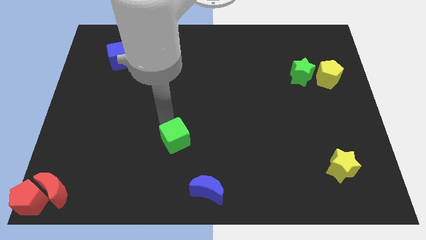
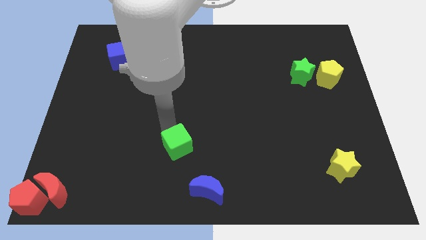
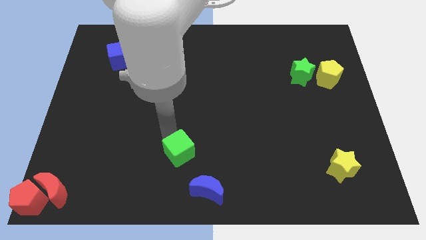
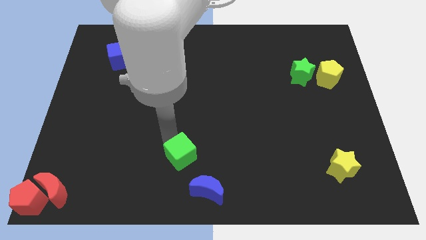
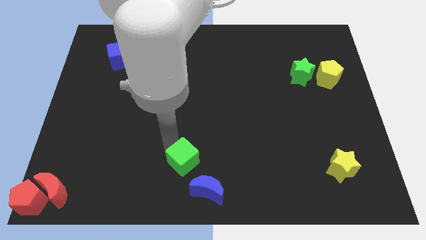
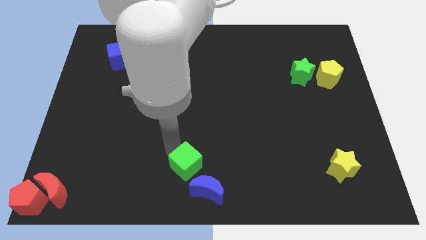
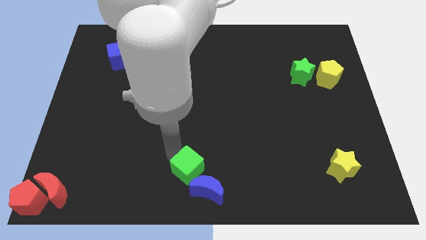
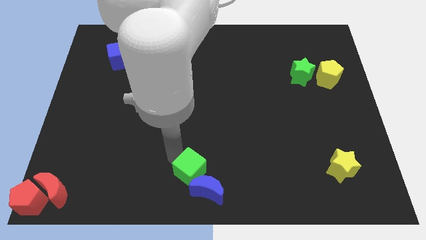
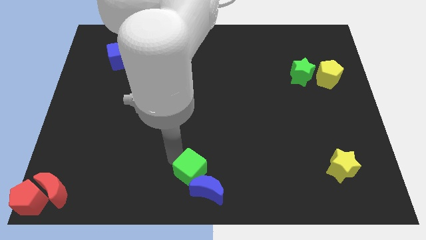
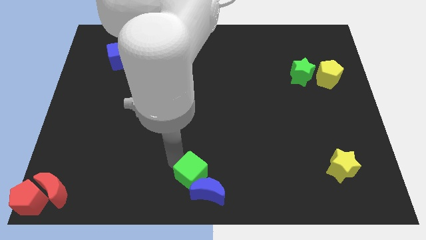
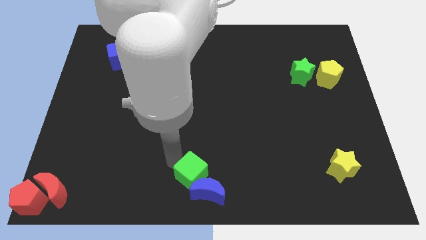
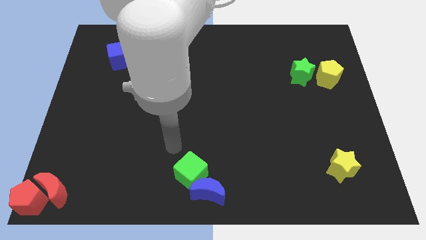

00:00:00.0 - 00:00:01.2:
drag the green cube into the blue crescent

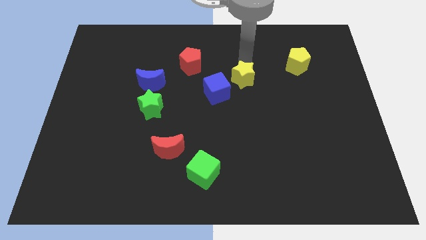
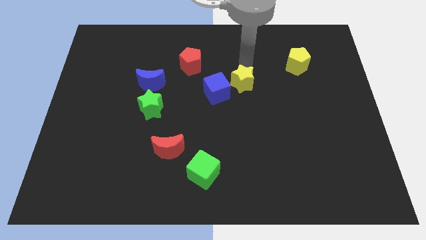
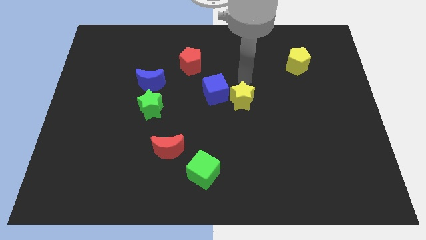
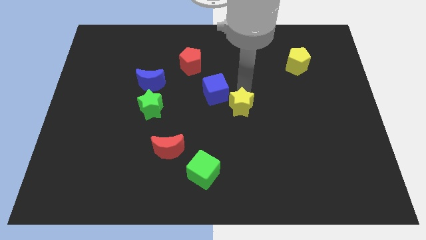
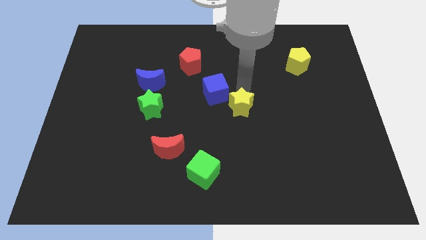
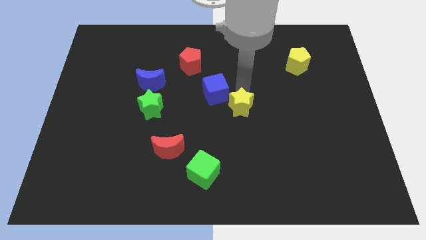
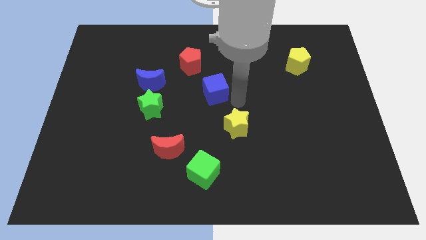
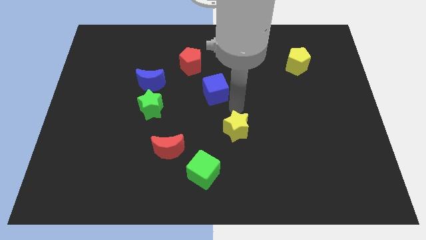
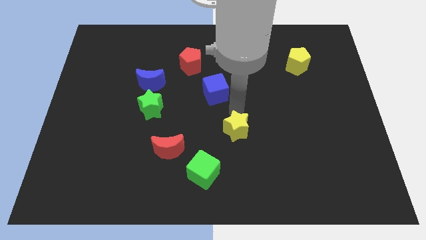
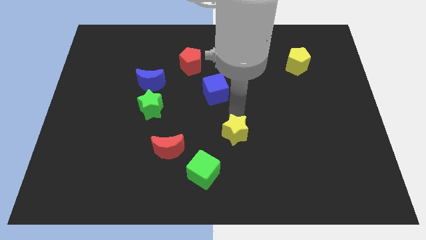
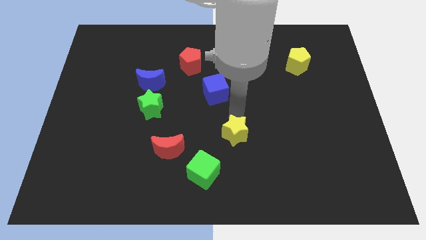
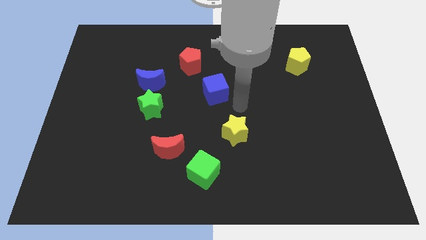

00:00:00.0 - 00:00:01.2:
move the yellow star below to the blue cube diagonal to green cube

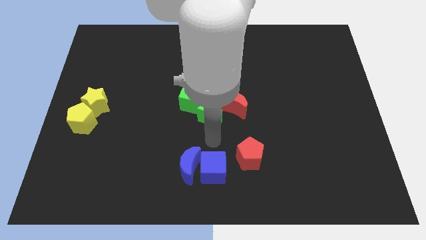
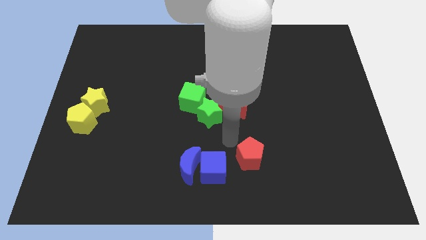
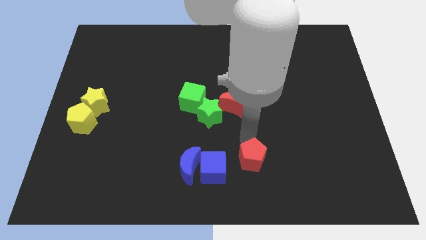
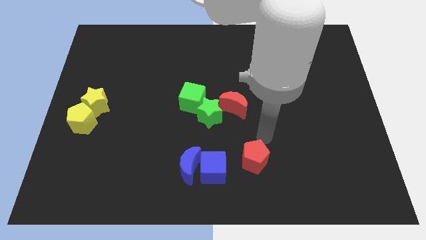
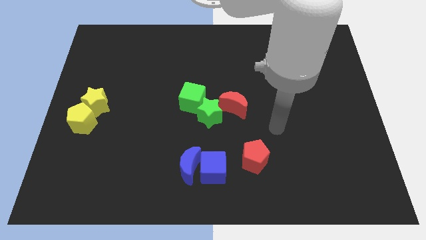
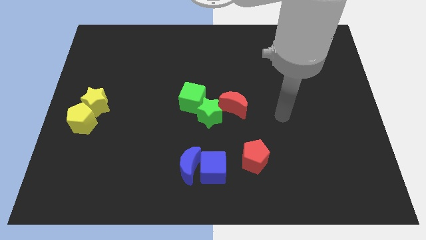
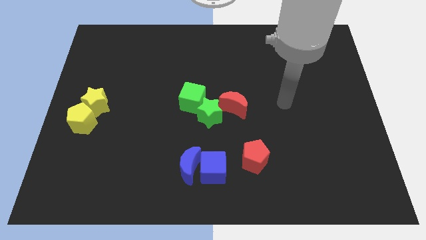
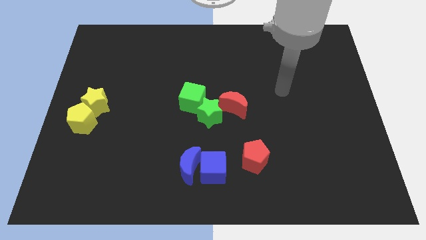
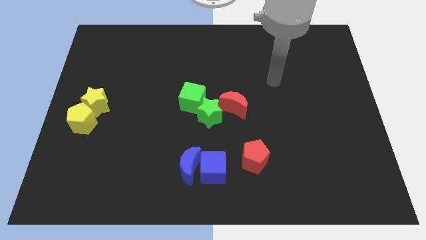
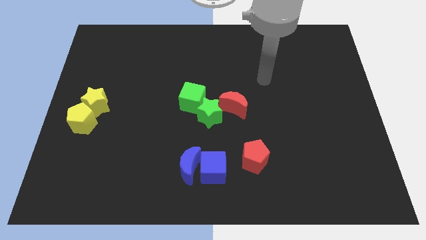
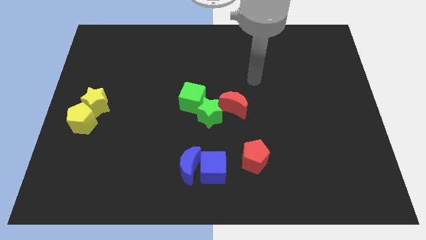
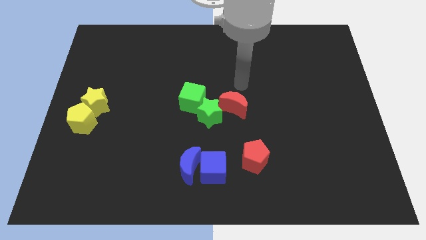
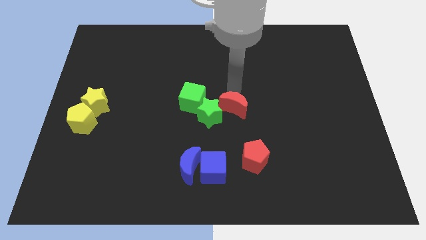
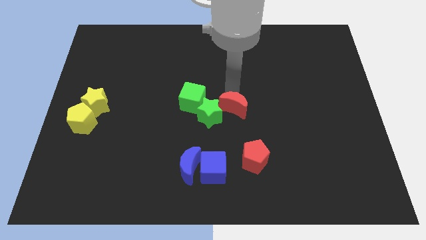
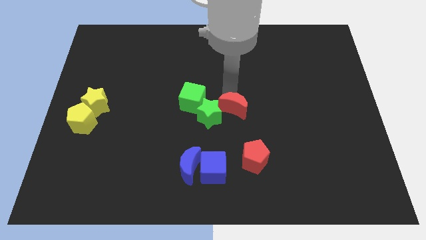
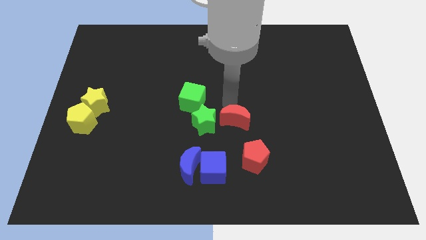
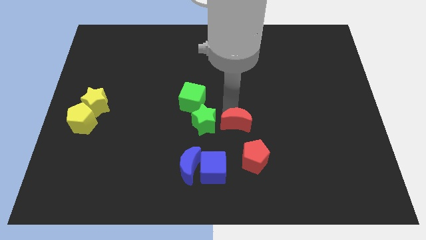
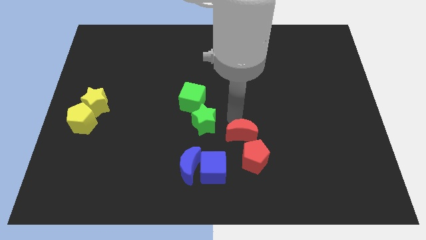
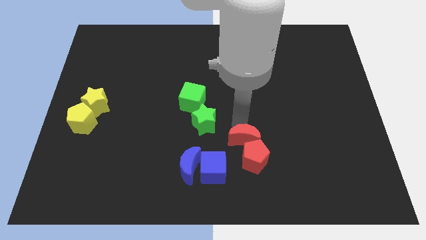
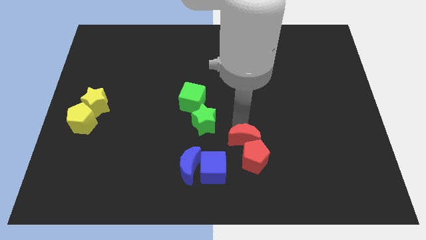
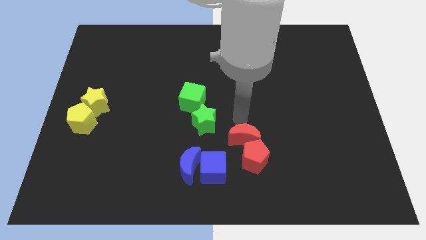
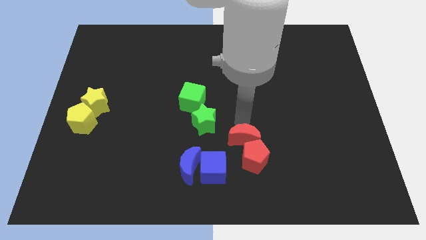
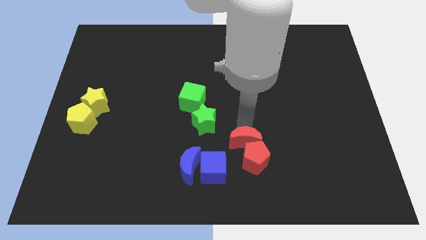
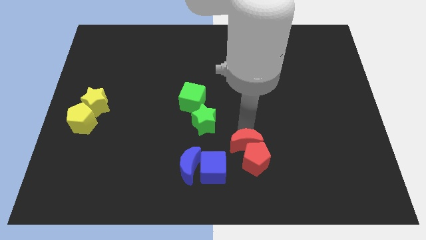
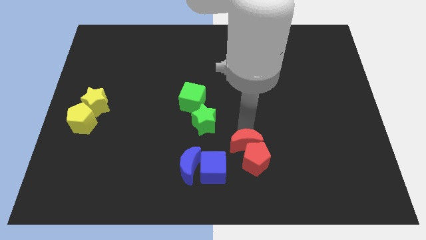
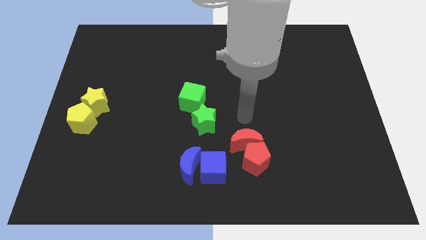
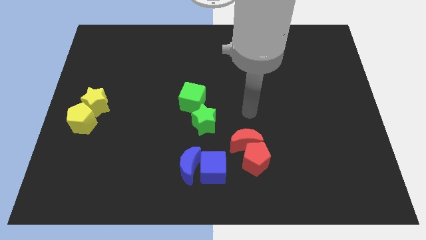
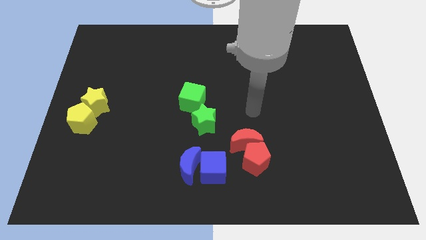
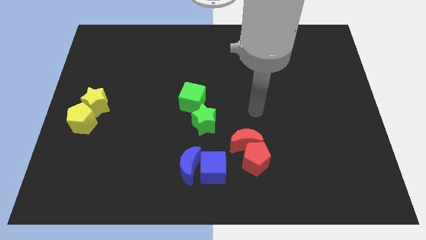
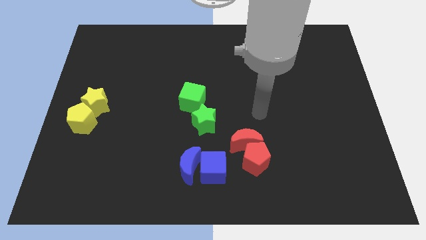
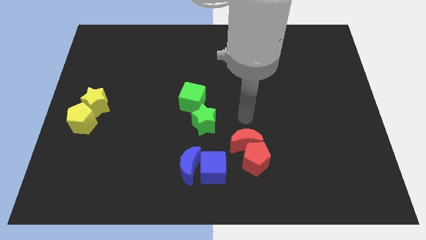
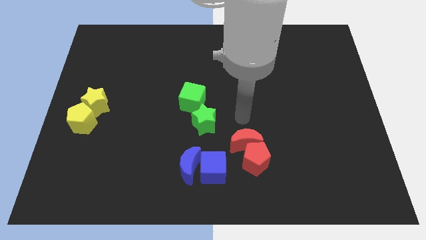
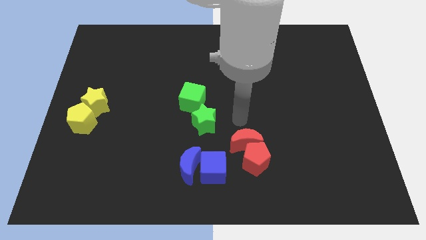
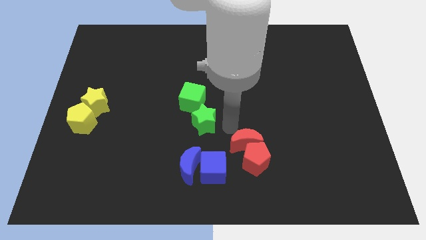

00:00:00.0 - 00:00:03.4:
push the red moon into the red pentagon

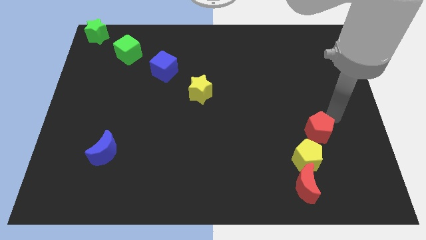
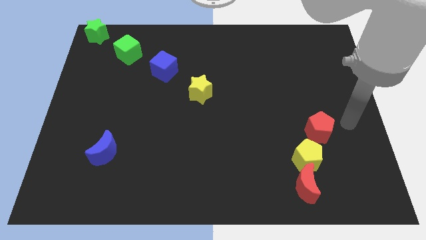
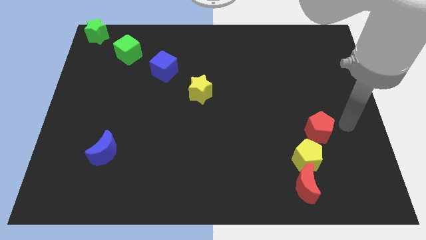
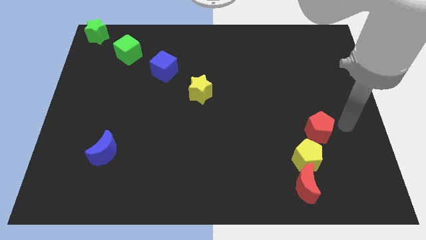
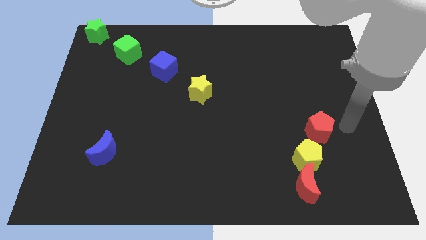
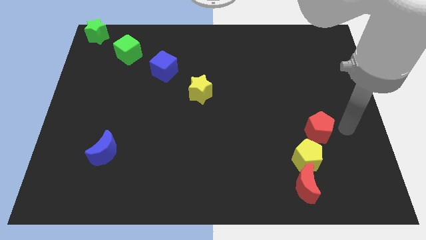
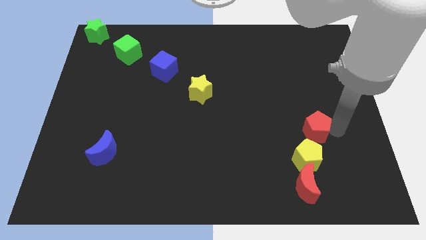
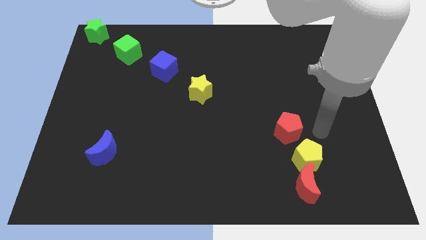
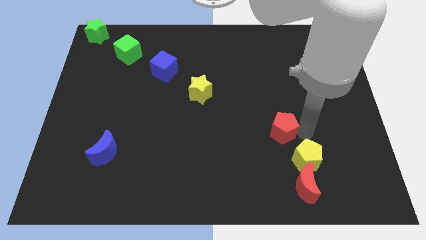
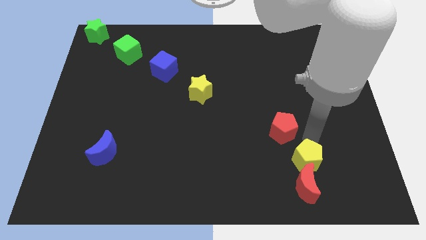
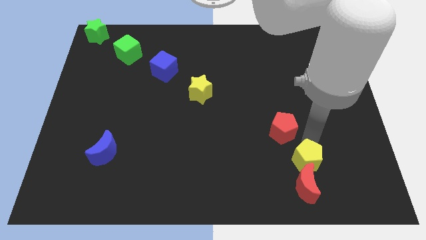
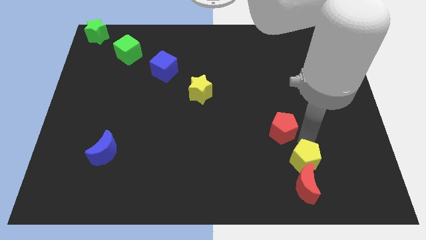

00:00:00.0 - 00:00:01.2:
push the red pentagon towards the diagonal line of blocks

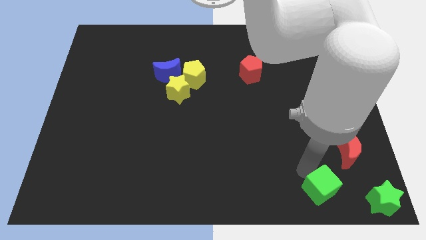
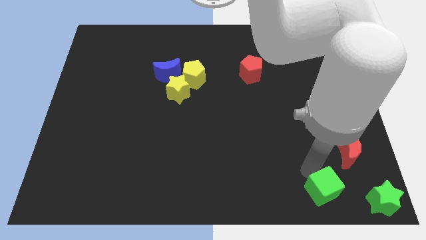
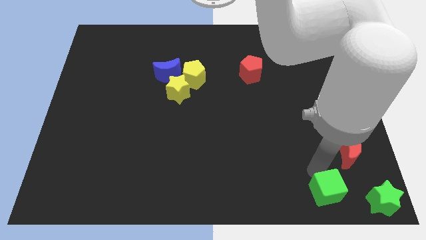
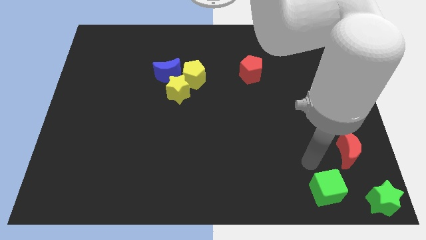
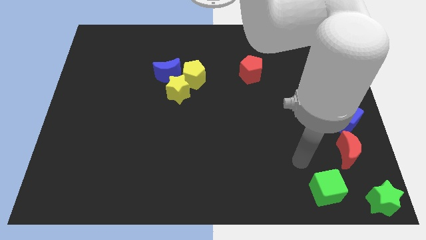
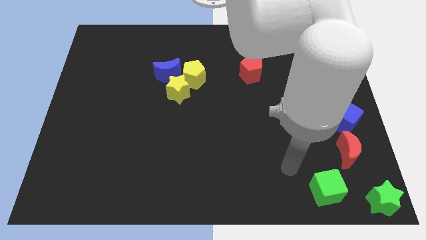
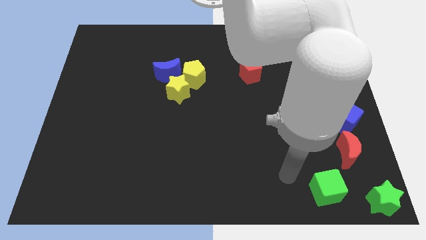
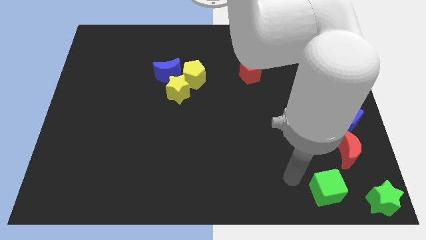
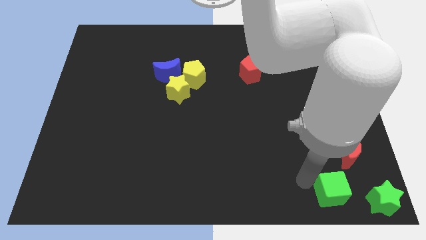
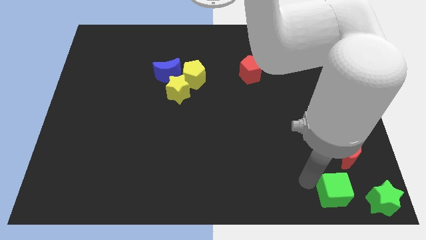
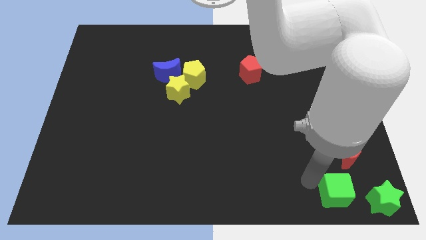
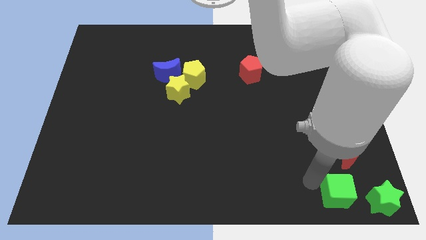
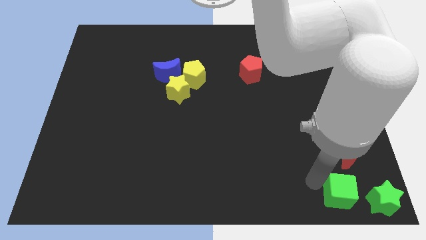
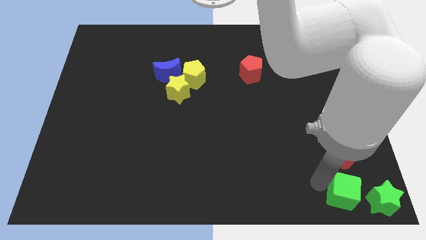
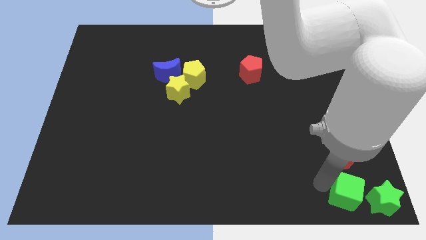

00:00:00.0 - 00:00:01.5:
push the green cube underneath the red moon

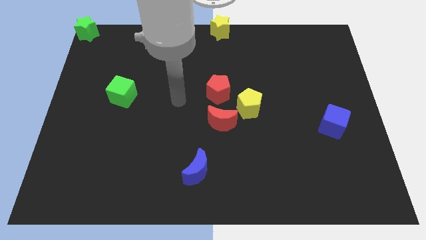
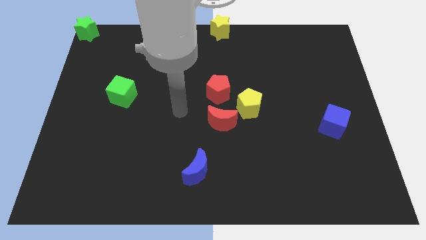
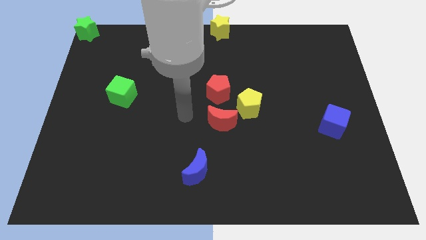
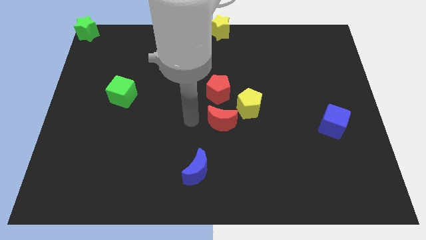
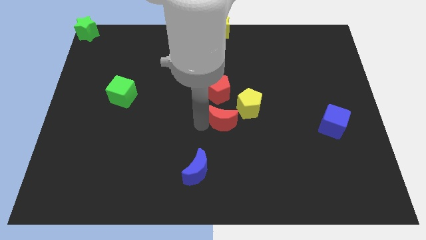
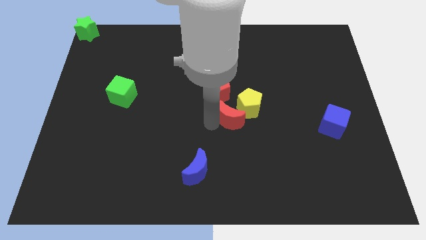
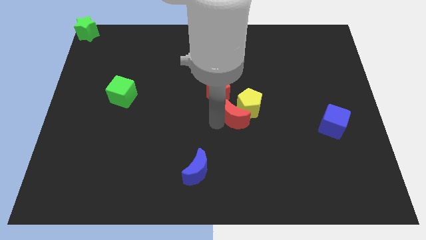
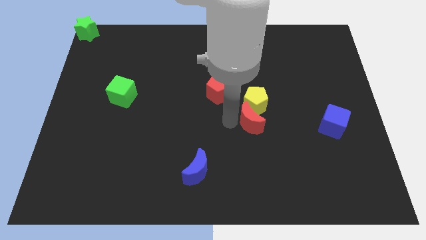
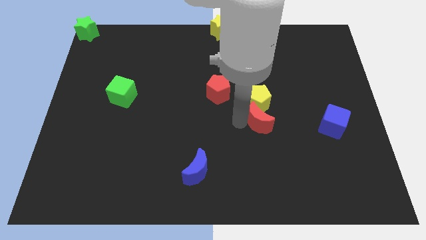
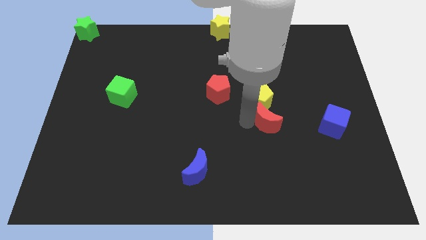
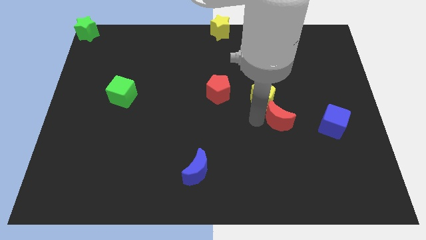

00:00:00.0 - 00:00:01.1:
move the red crescent into the yellow pentagon
